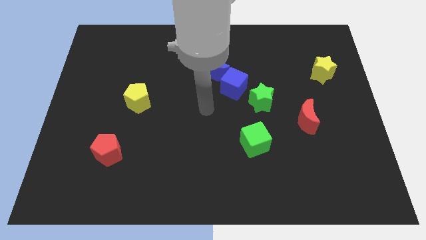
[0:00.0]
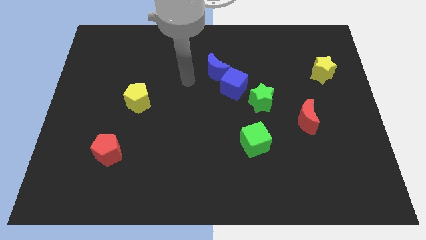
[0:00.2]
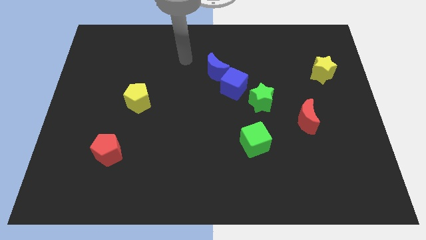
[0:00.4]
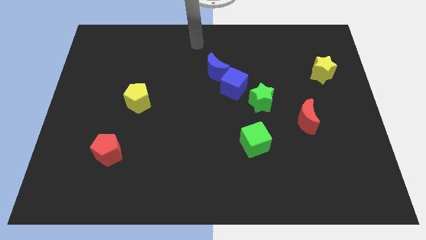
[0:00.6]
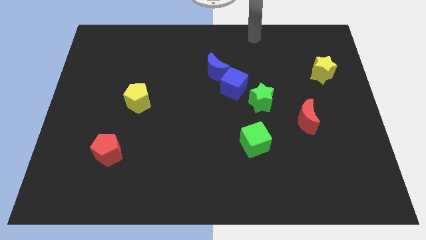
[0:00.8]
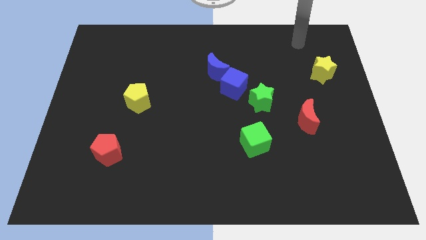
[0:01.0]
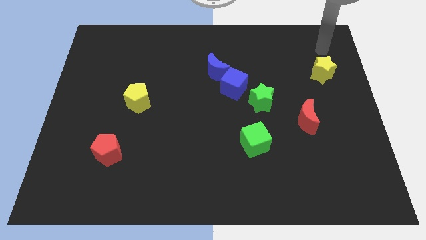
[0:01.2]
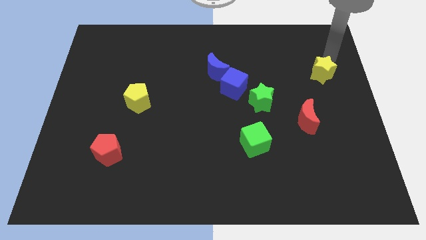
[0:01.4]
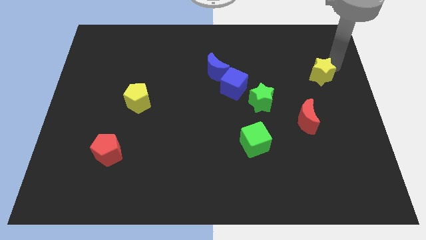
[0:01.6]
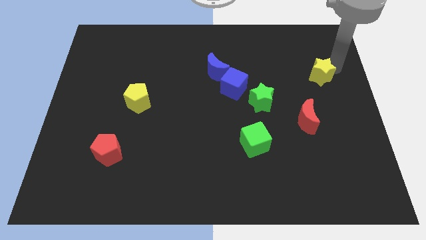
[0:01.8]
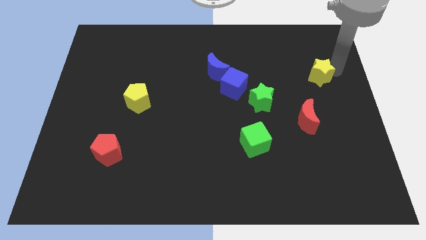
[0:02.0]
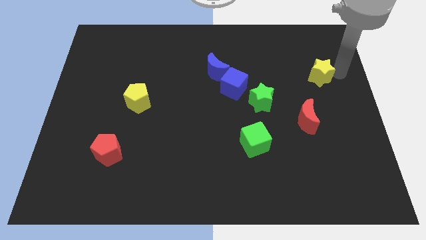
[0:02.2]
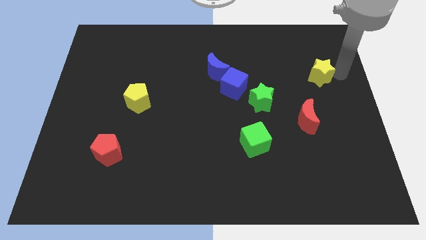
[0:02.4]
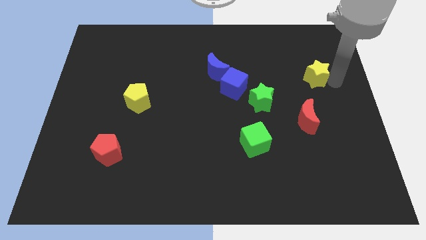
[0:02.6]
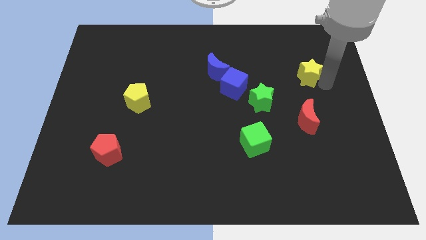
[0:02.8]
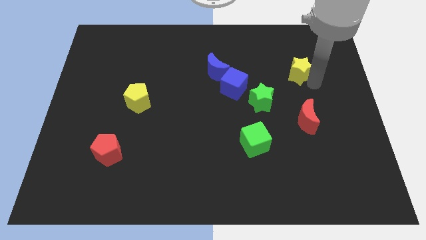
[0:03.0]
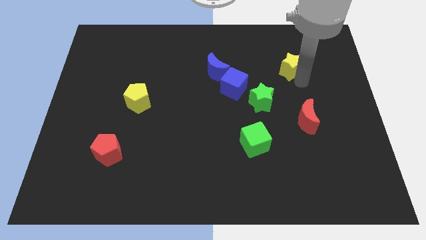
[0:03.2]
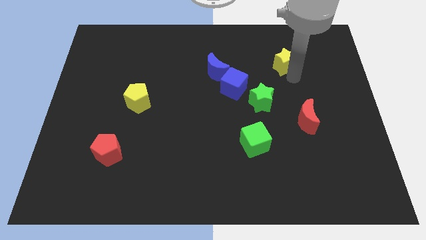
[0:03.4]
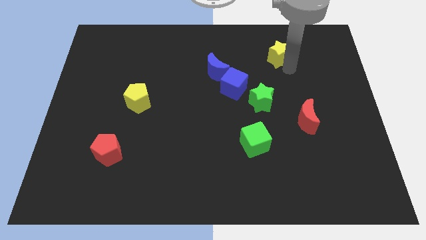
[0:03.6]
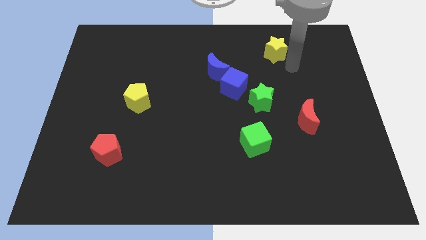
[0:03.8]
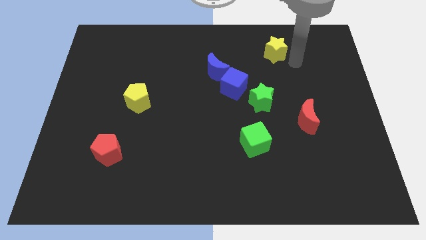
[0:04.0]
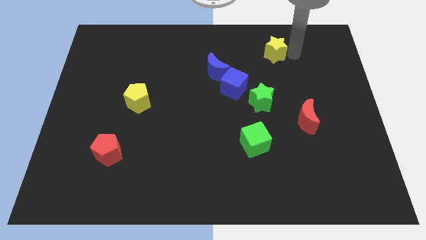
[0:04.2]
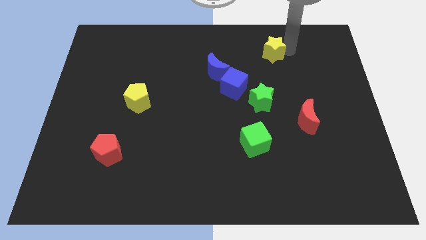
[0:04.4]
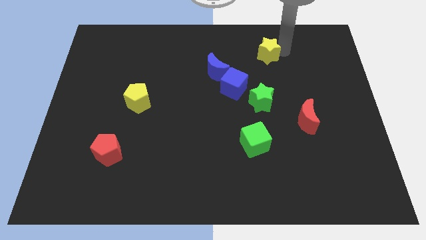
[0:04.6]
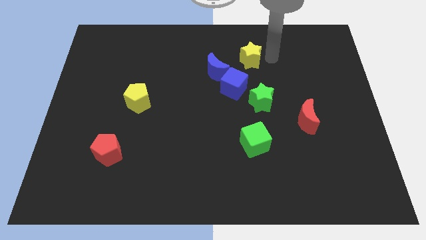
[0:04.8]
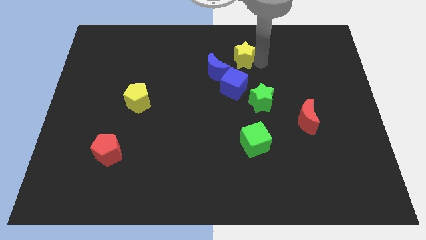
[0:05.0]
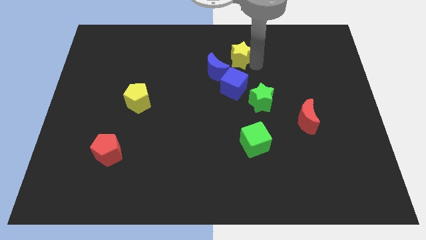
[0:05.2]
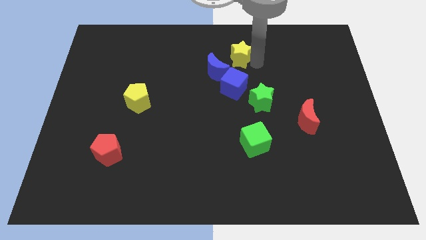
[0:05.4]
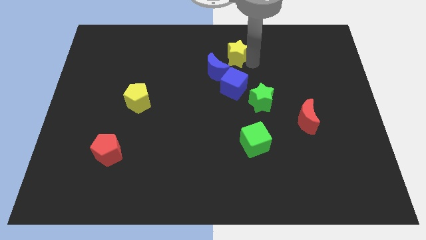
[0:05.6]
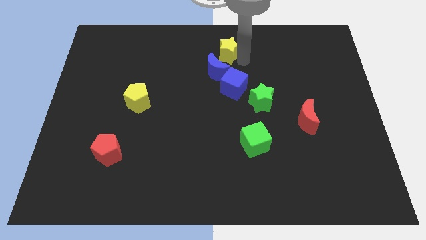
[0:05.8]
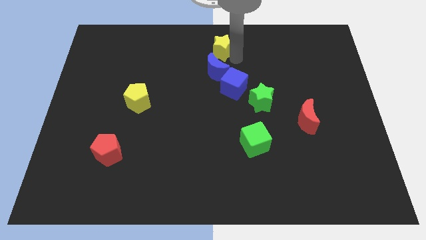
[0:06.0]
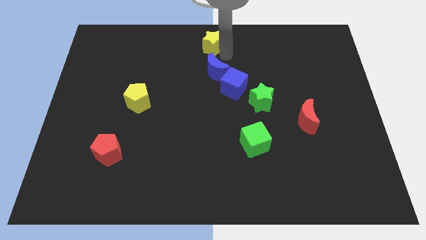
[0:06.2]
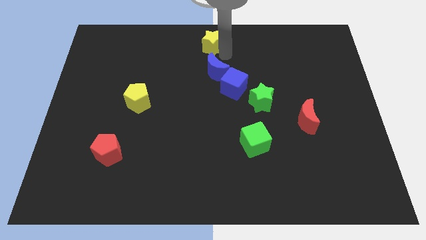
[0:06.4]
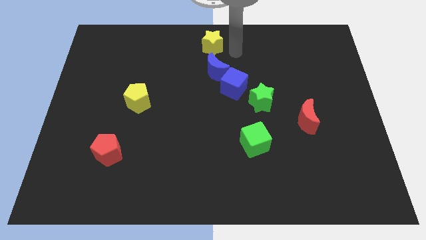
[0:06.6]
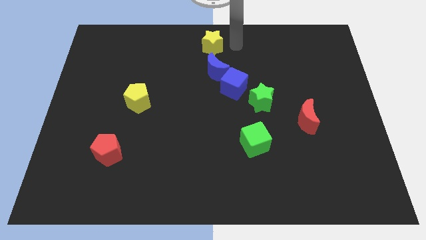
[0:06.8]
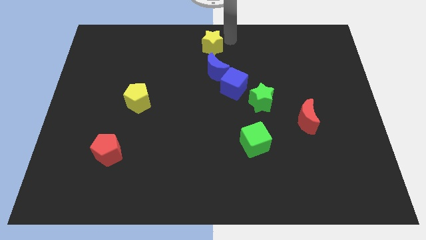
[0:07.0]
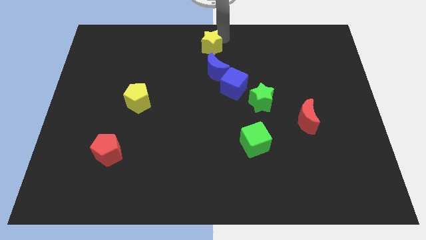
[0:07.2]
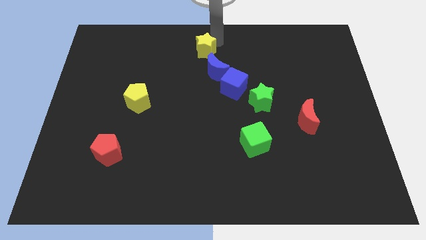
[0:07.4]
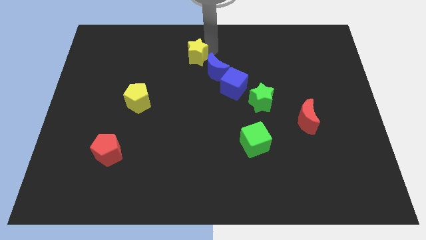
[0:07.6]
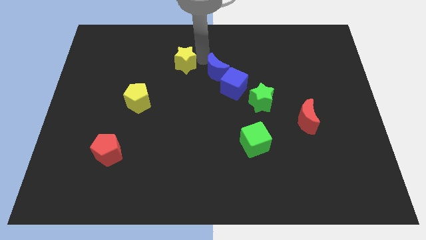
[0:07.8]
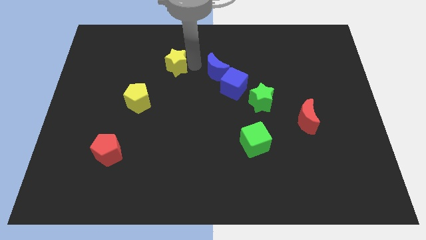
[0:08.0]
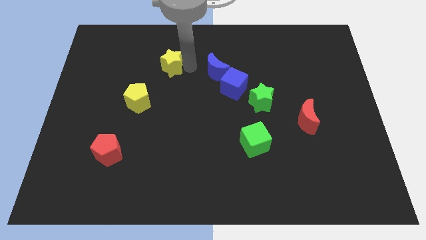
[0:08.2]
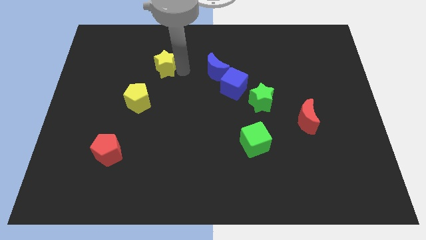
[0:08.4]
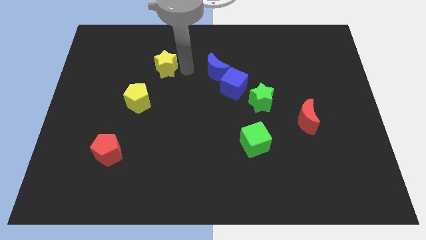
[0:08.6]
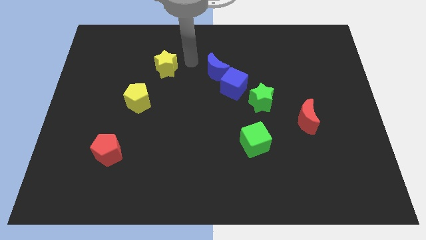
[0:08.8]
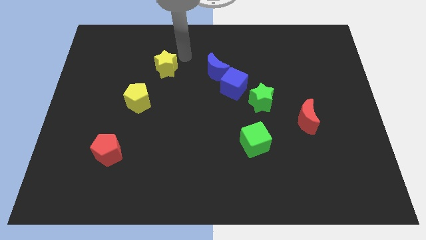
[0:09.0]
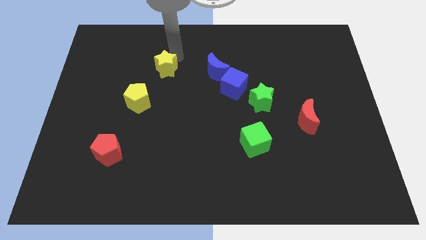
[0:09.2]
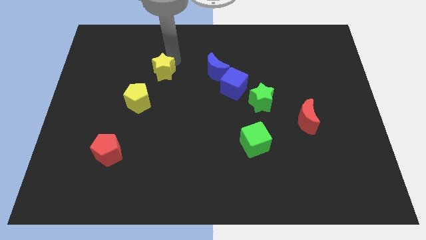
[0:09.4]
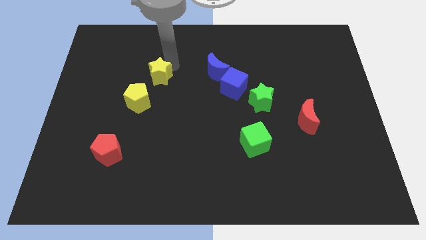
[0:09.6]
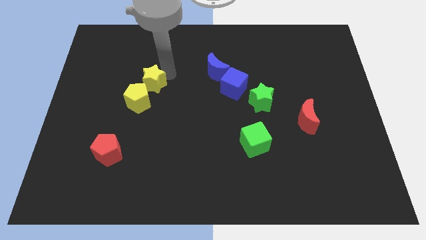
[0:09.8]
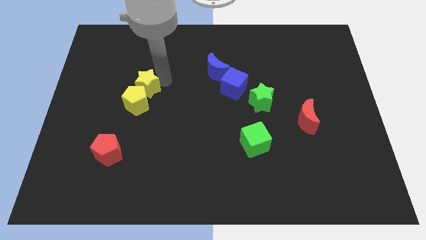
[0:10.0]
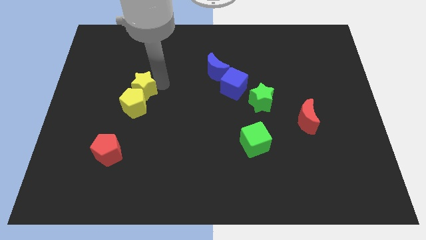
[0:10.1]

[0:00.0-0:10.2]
push the yellow star close to the yellow pentagon

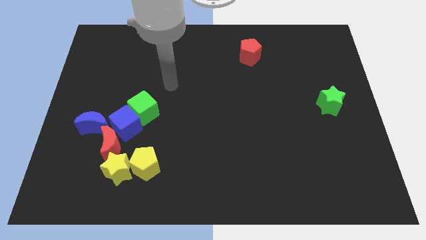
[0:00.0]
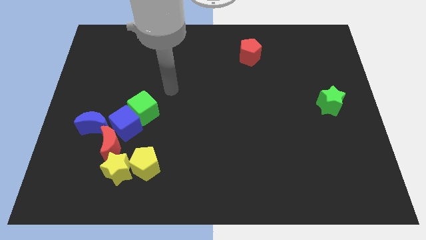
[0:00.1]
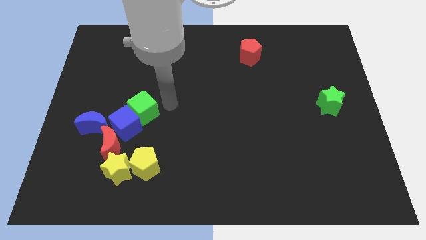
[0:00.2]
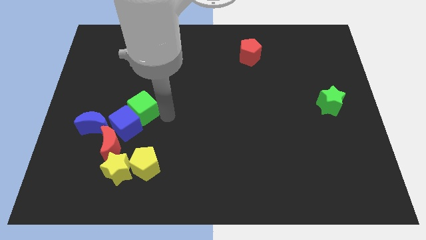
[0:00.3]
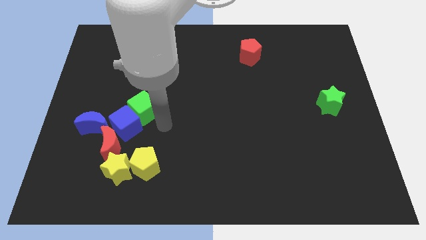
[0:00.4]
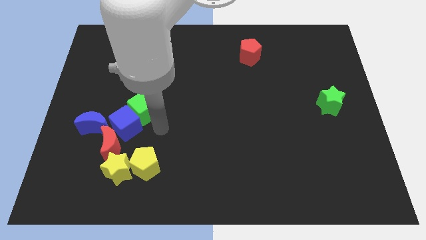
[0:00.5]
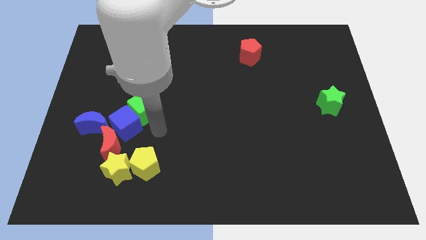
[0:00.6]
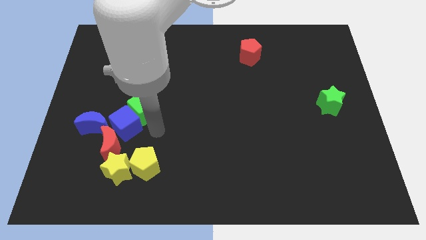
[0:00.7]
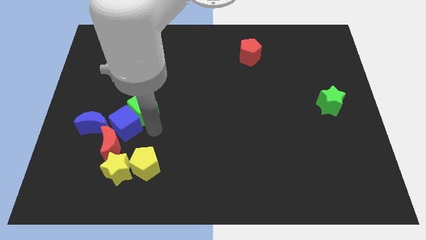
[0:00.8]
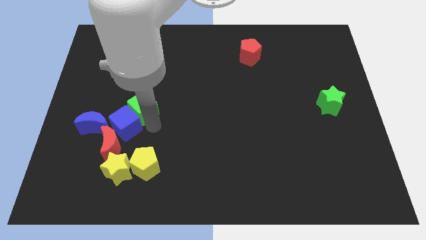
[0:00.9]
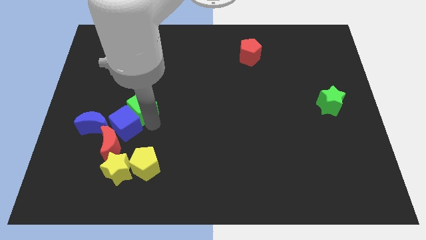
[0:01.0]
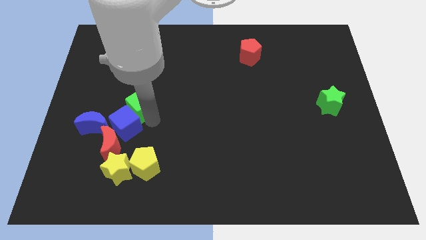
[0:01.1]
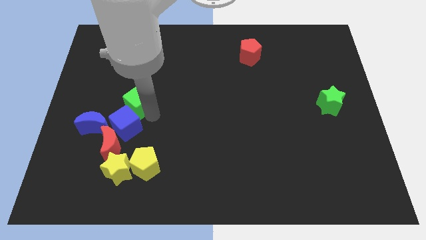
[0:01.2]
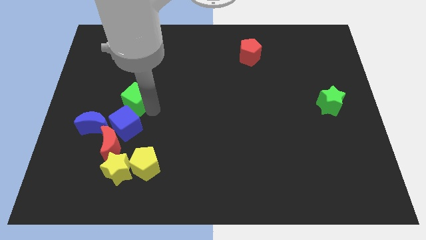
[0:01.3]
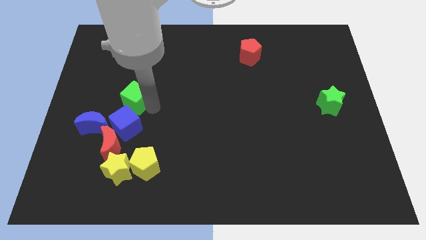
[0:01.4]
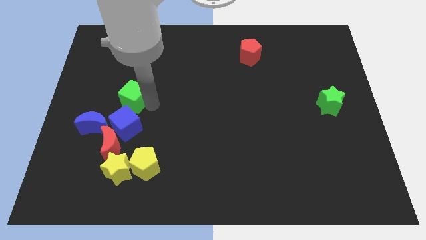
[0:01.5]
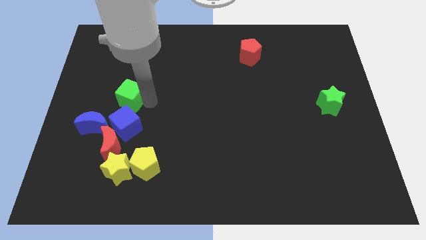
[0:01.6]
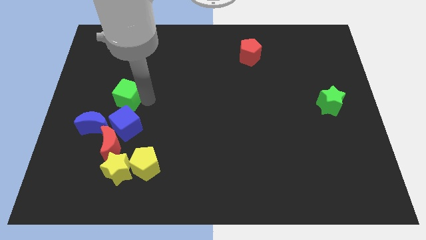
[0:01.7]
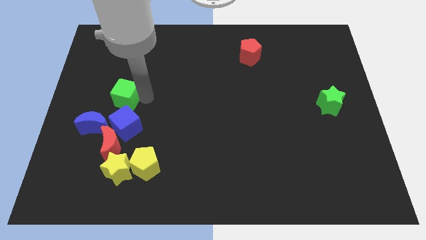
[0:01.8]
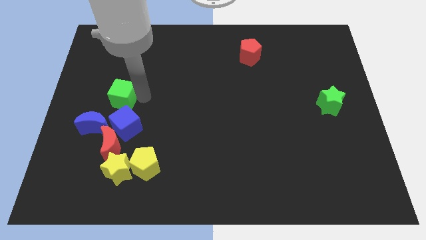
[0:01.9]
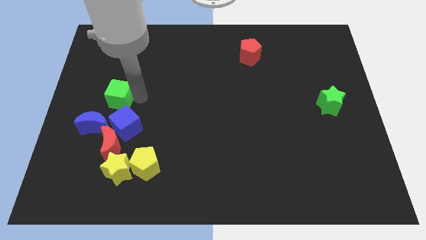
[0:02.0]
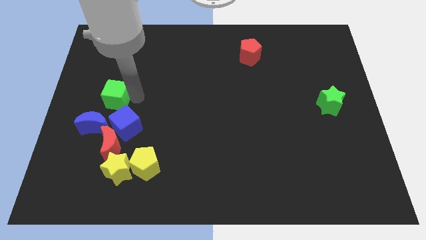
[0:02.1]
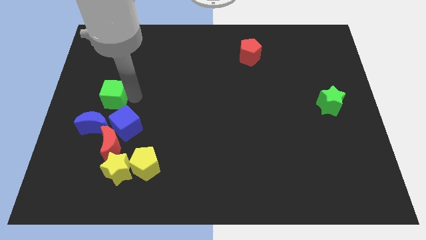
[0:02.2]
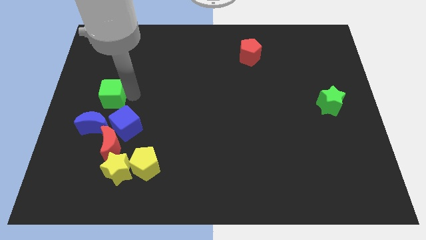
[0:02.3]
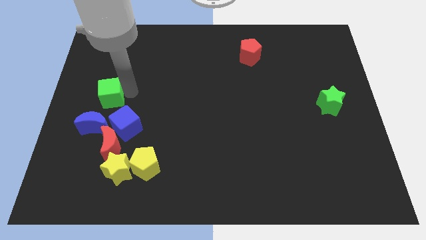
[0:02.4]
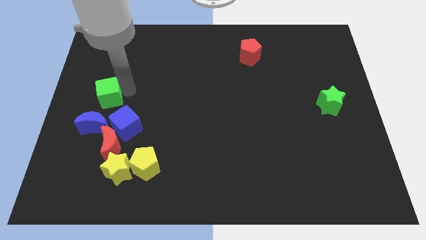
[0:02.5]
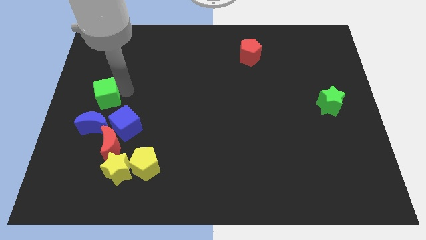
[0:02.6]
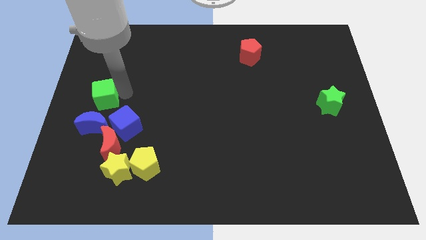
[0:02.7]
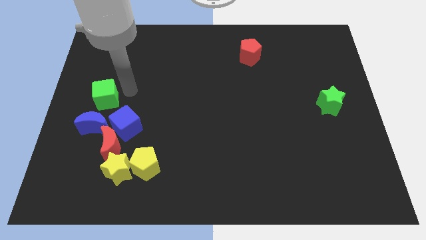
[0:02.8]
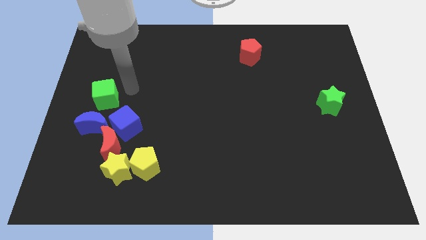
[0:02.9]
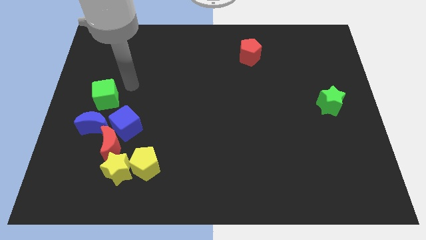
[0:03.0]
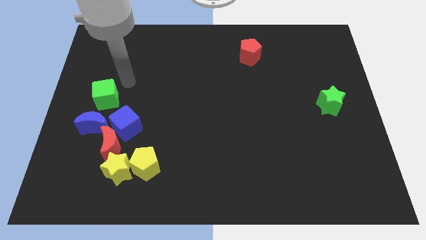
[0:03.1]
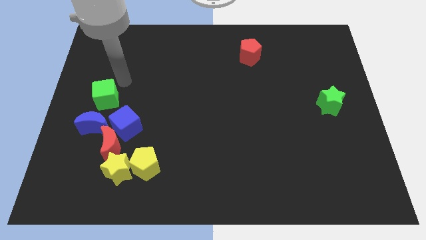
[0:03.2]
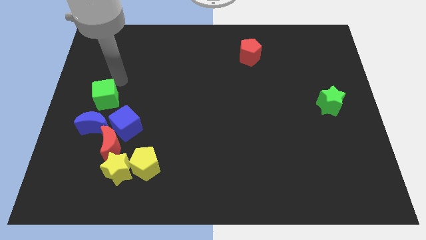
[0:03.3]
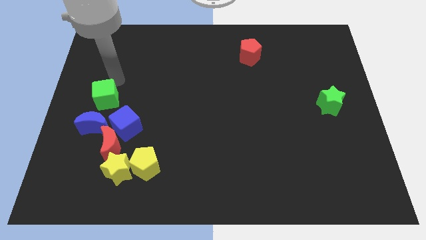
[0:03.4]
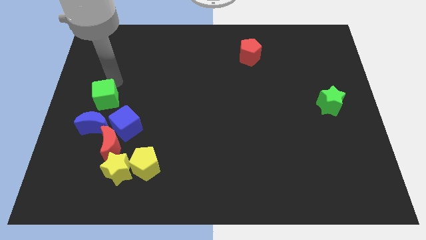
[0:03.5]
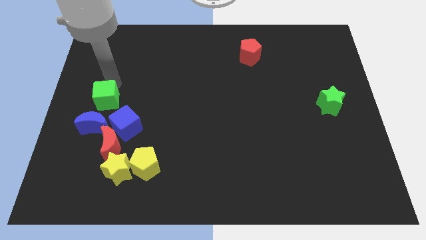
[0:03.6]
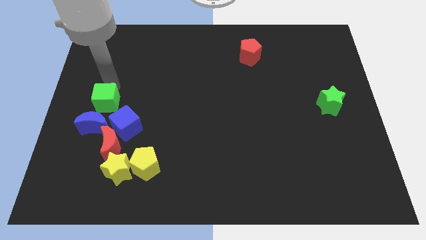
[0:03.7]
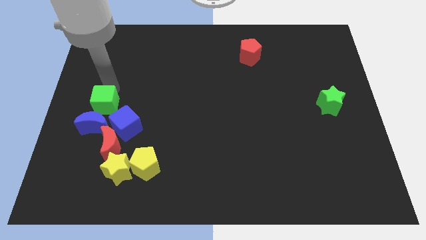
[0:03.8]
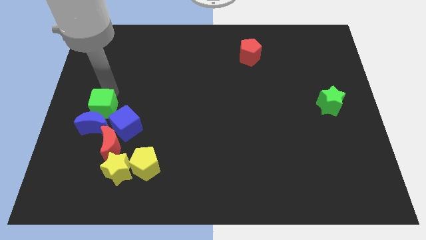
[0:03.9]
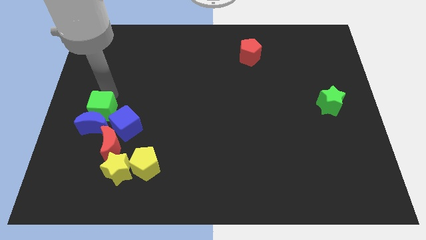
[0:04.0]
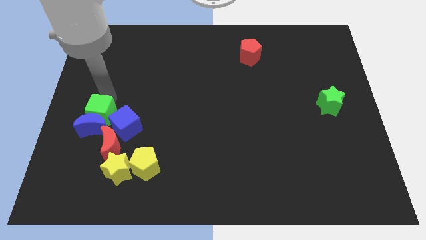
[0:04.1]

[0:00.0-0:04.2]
put the green cube next to the blue moon
